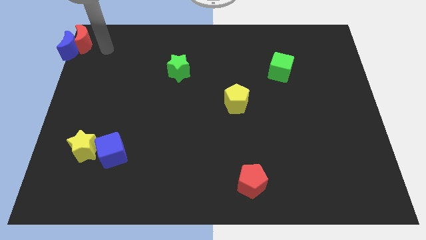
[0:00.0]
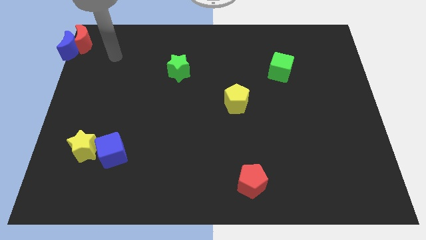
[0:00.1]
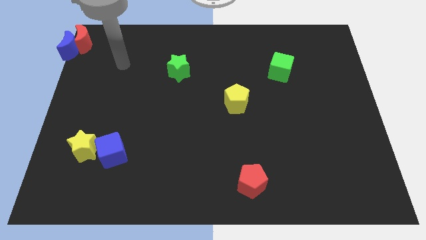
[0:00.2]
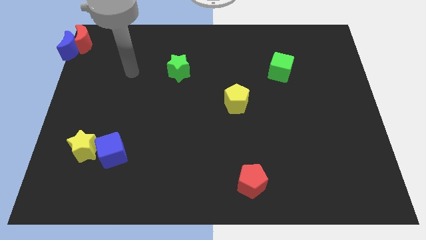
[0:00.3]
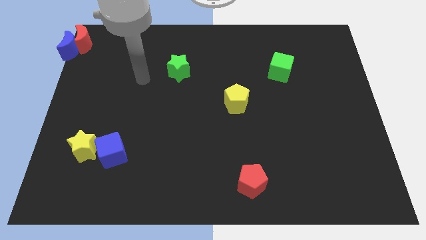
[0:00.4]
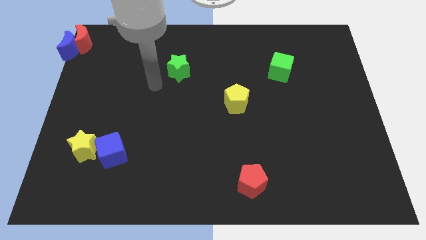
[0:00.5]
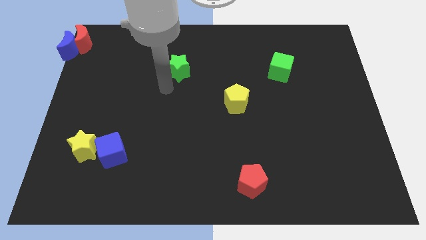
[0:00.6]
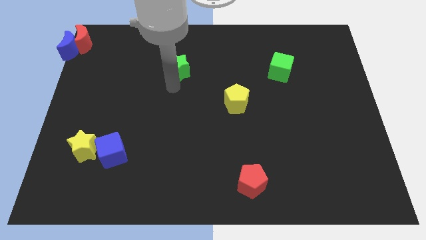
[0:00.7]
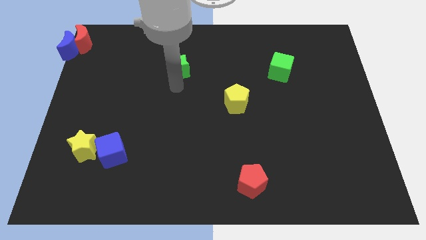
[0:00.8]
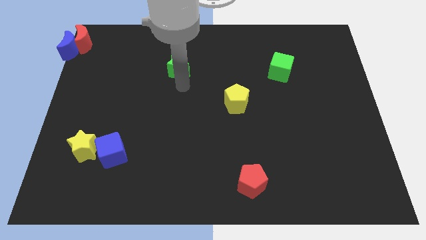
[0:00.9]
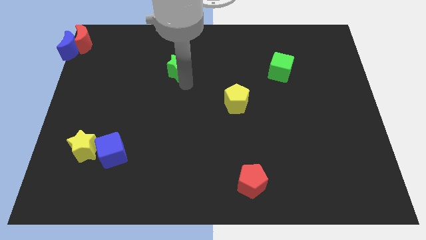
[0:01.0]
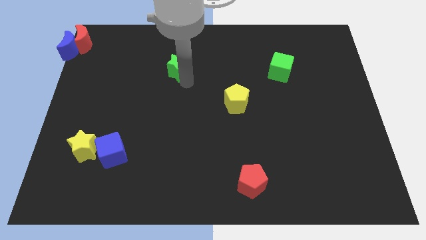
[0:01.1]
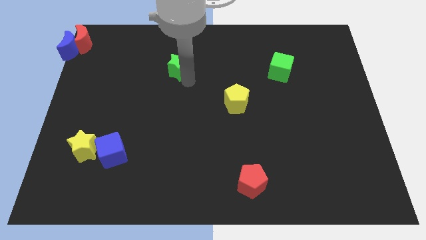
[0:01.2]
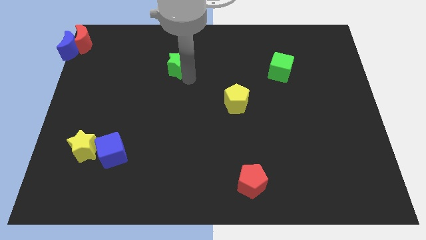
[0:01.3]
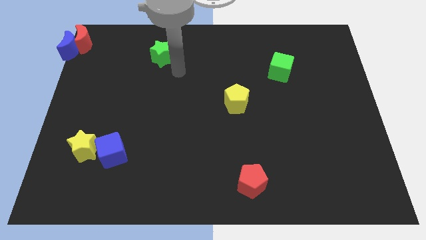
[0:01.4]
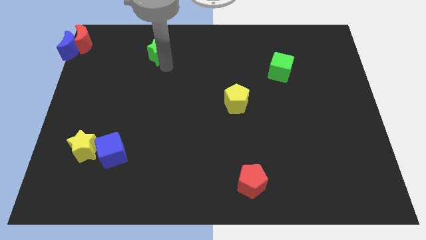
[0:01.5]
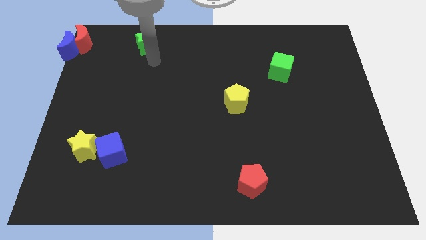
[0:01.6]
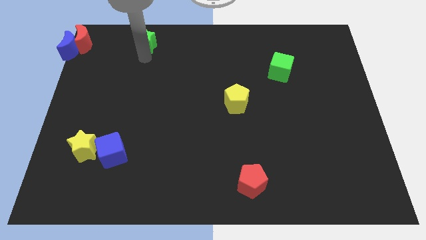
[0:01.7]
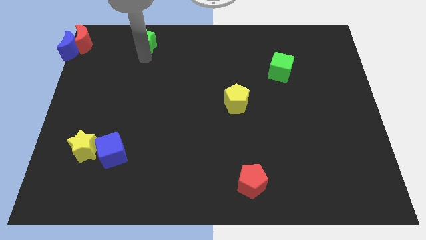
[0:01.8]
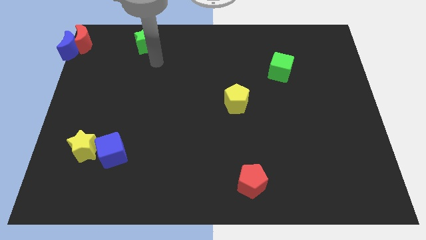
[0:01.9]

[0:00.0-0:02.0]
move the green star horizontally to the right side of the red crescent

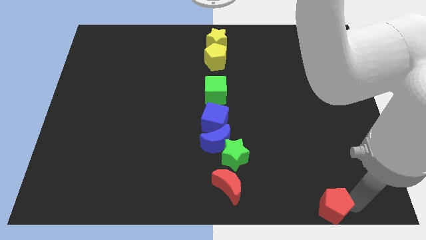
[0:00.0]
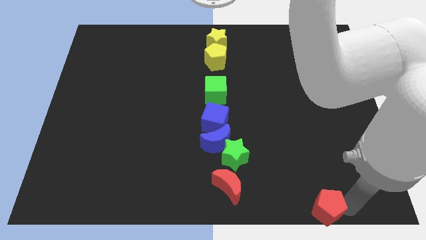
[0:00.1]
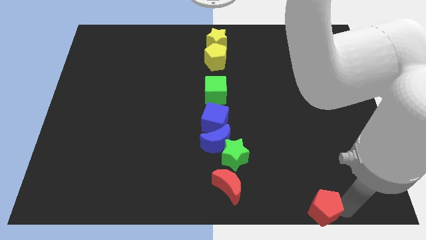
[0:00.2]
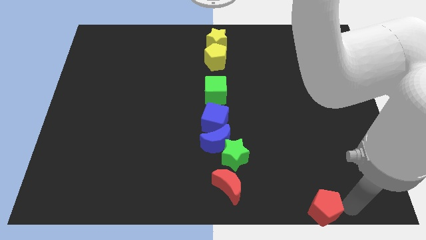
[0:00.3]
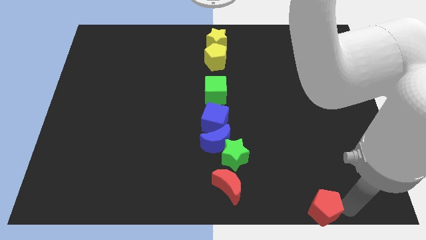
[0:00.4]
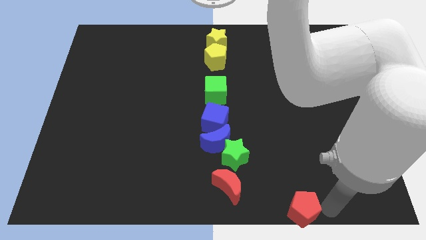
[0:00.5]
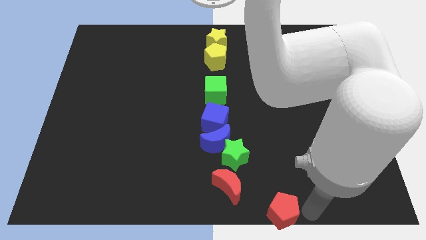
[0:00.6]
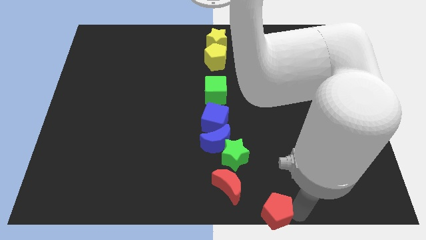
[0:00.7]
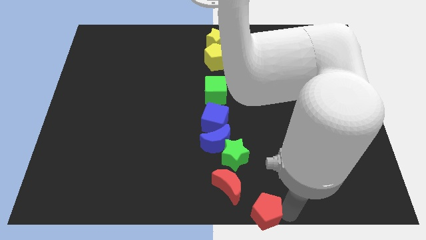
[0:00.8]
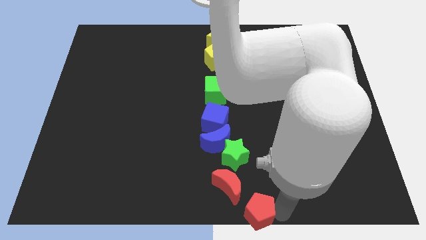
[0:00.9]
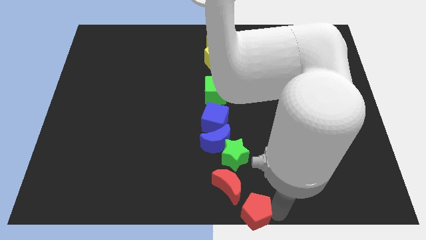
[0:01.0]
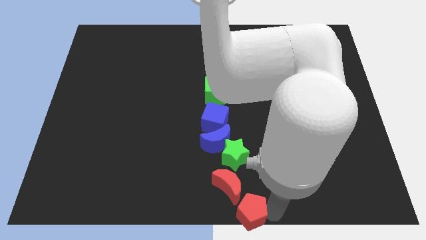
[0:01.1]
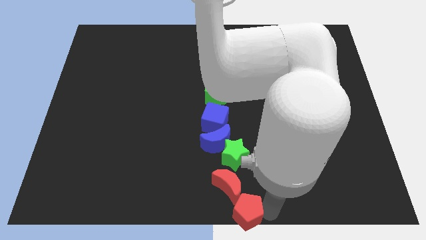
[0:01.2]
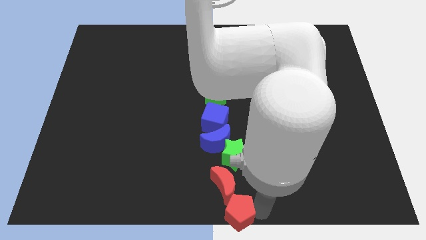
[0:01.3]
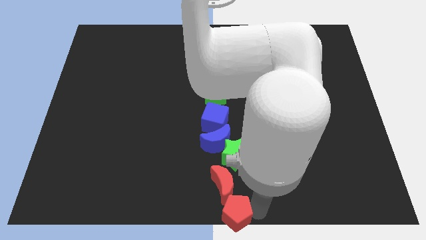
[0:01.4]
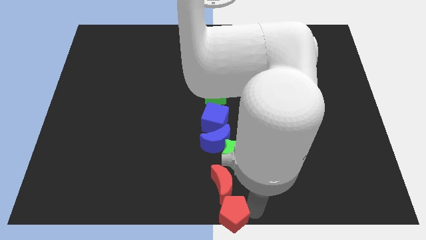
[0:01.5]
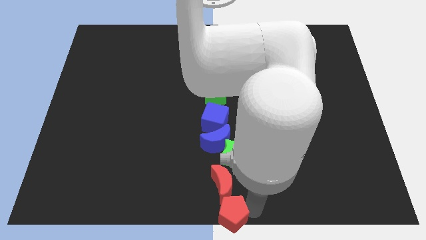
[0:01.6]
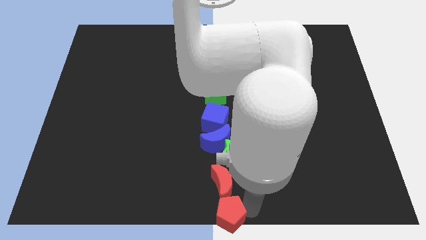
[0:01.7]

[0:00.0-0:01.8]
push the red pentagon into the red moon

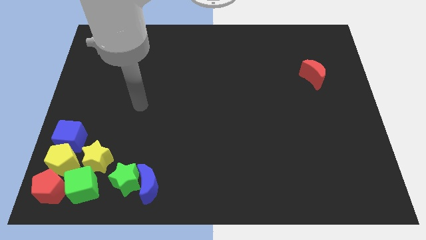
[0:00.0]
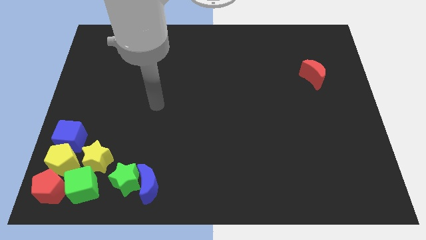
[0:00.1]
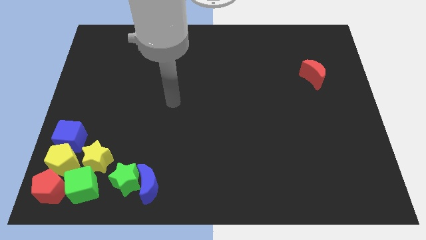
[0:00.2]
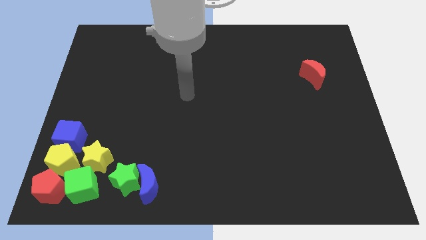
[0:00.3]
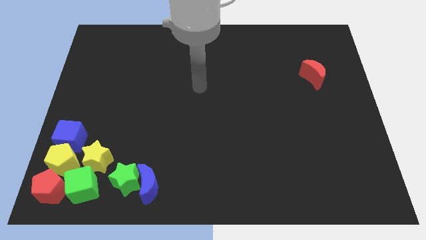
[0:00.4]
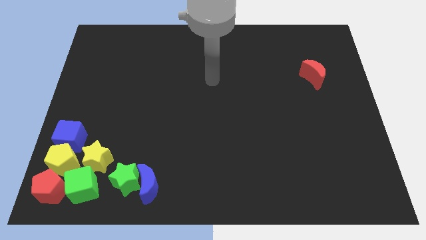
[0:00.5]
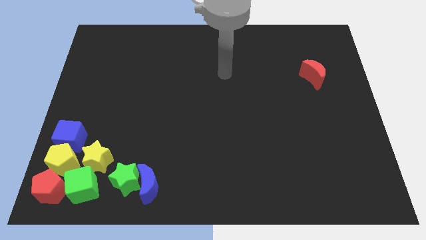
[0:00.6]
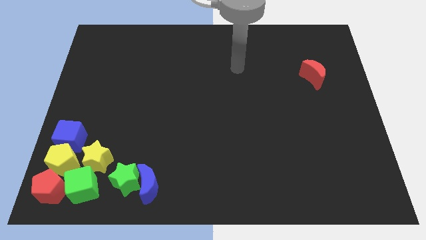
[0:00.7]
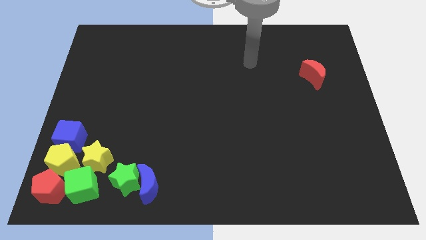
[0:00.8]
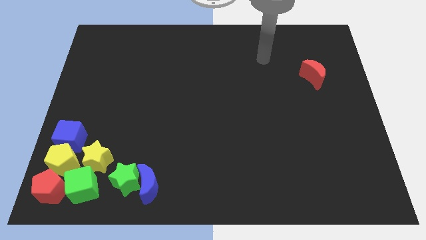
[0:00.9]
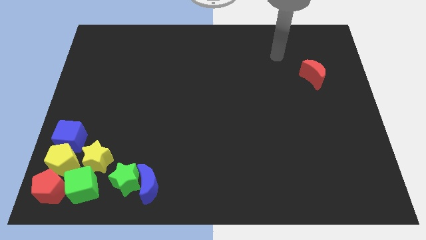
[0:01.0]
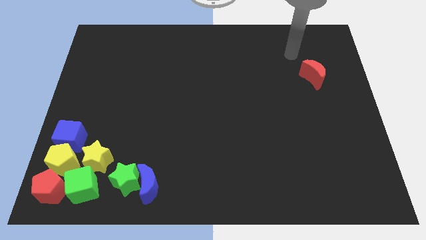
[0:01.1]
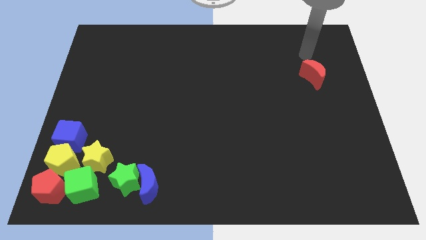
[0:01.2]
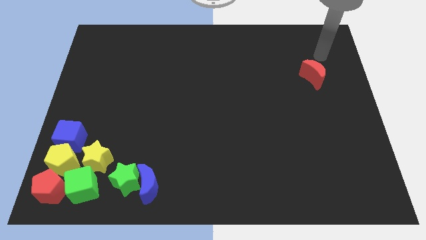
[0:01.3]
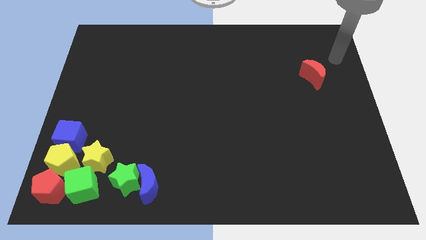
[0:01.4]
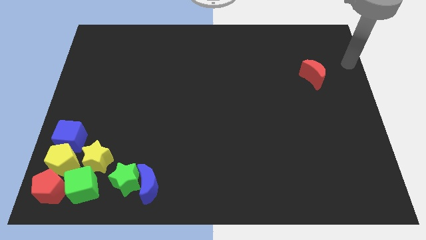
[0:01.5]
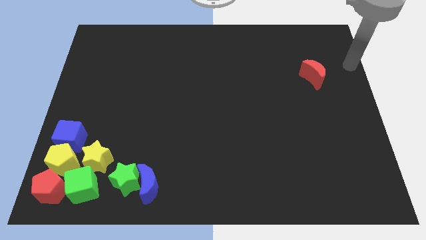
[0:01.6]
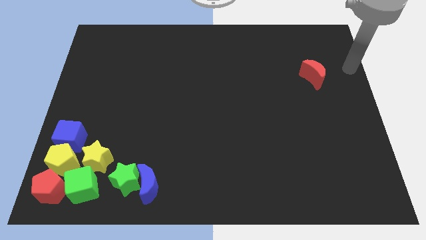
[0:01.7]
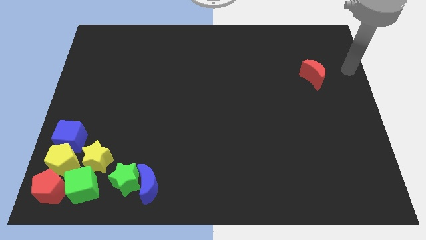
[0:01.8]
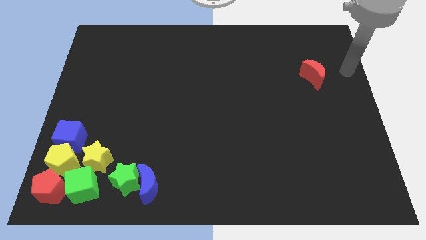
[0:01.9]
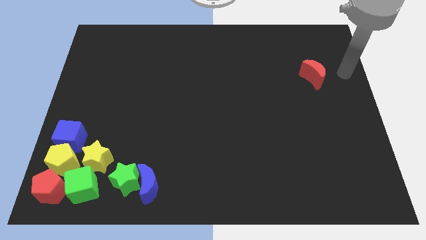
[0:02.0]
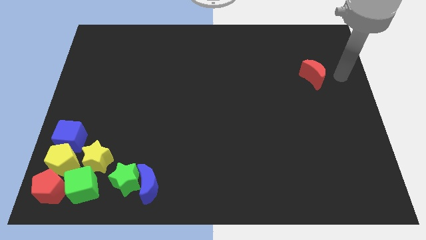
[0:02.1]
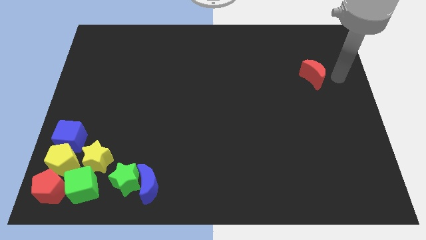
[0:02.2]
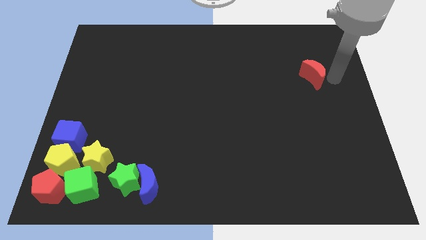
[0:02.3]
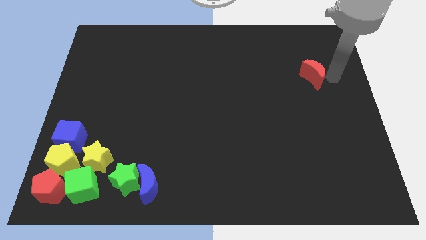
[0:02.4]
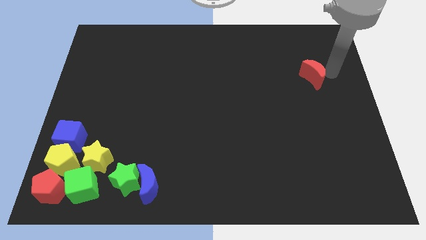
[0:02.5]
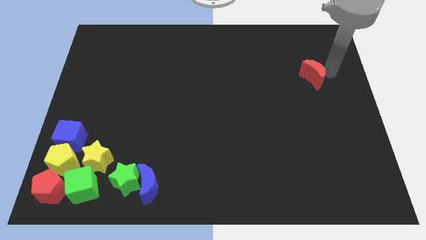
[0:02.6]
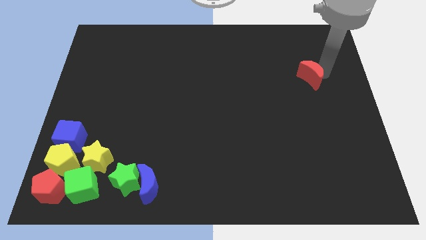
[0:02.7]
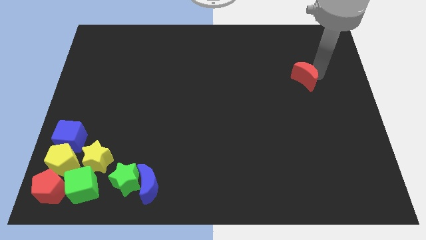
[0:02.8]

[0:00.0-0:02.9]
point your arm above red crescent

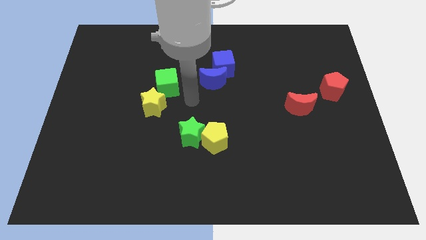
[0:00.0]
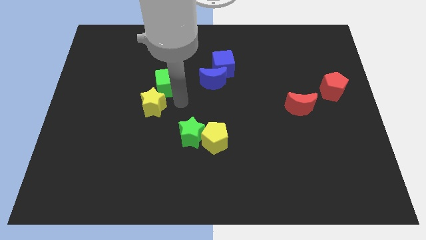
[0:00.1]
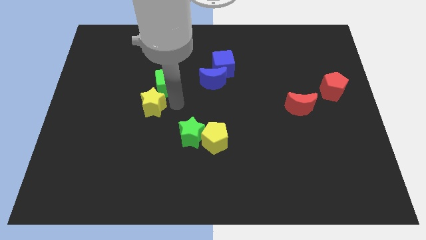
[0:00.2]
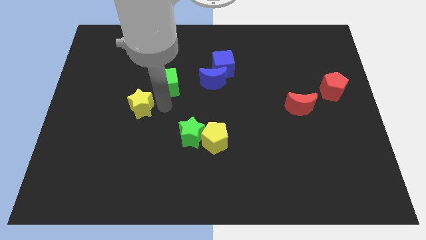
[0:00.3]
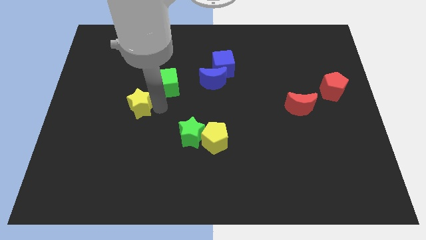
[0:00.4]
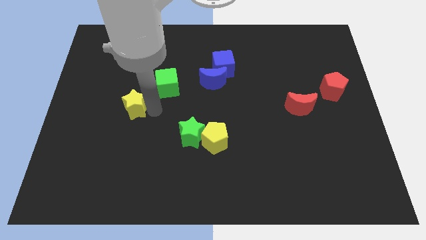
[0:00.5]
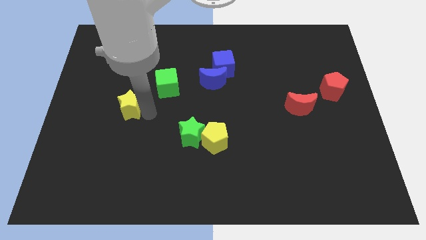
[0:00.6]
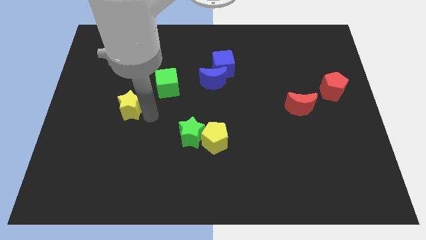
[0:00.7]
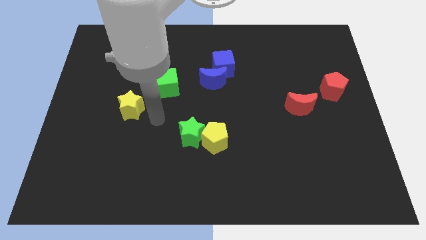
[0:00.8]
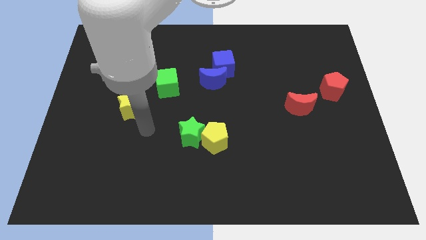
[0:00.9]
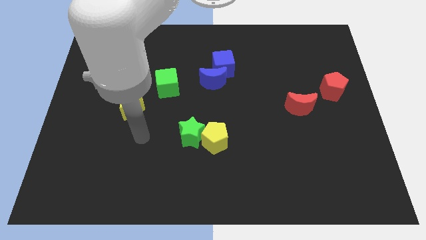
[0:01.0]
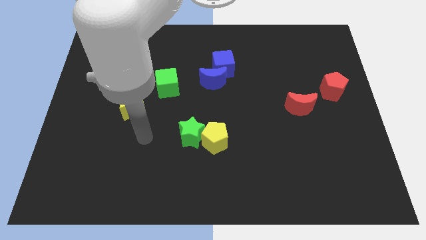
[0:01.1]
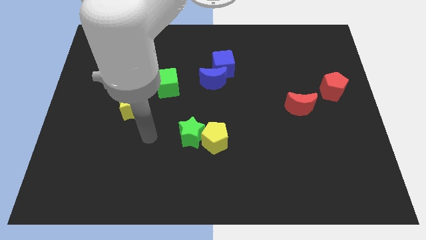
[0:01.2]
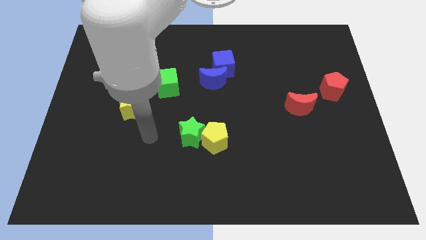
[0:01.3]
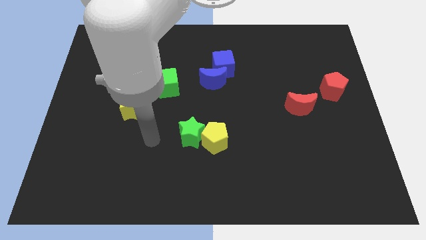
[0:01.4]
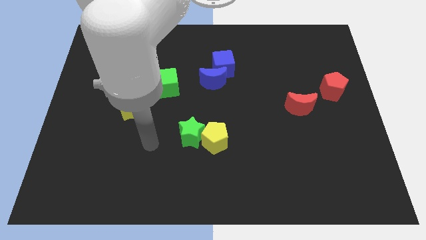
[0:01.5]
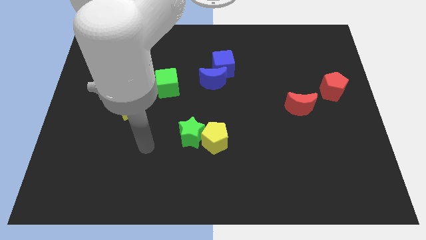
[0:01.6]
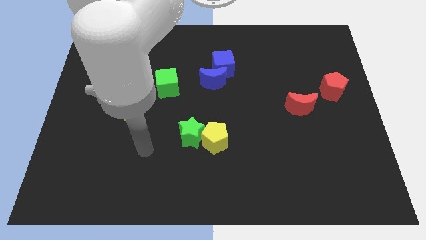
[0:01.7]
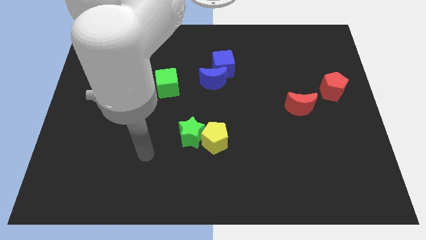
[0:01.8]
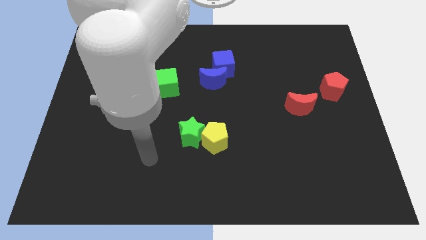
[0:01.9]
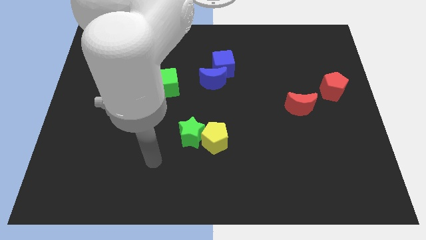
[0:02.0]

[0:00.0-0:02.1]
push the yellow star towards the left of the board

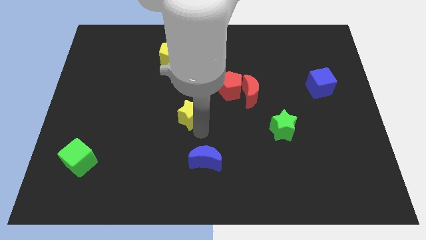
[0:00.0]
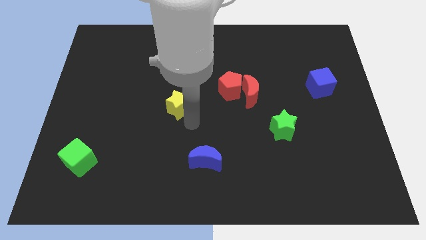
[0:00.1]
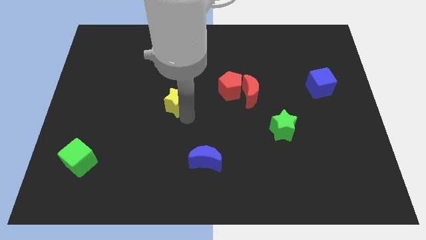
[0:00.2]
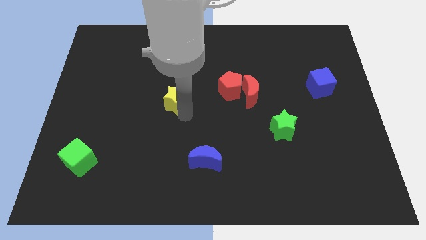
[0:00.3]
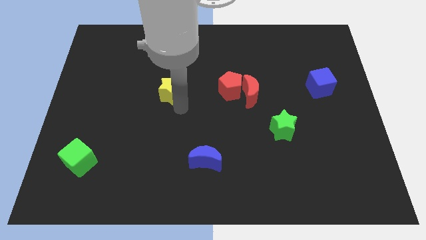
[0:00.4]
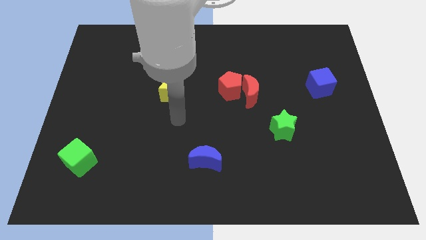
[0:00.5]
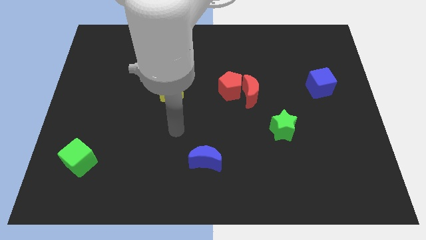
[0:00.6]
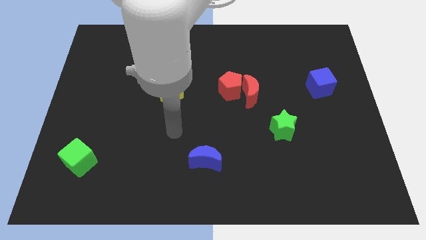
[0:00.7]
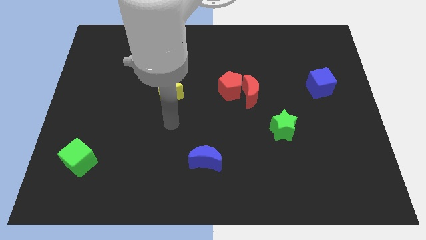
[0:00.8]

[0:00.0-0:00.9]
place the yellow star to the left of the red pentagon
